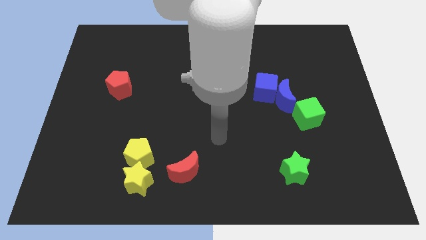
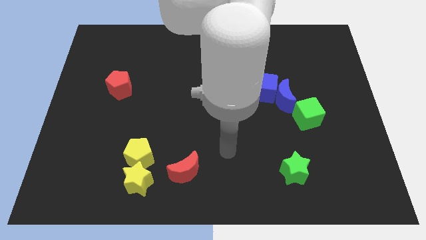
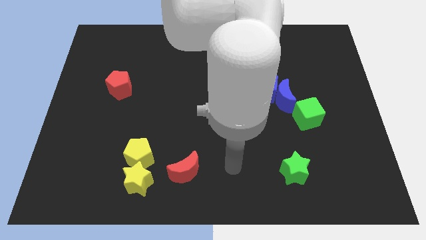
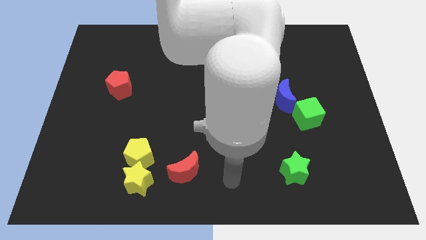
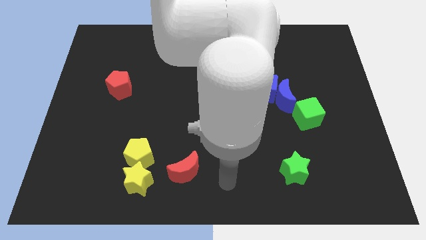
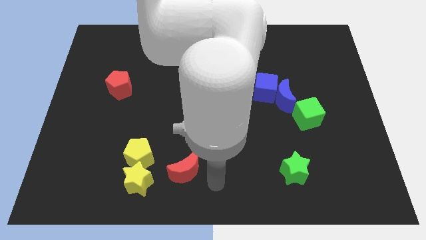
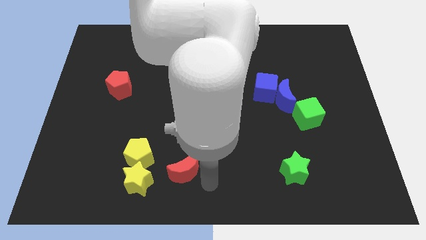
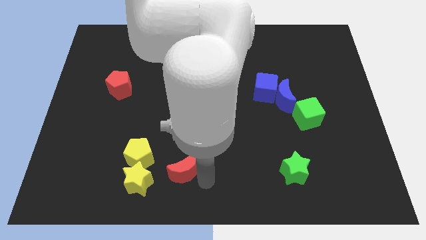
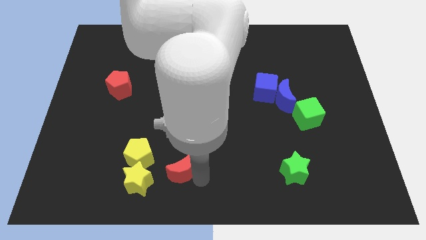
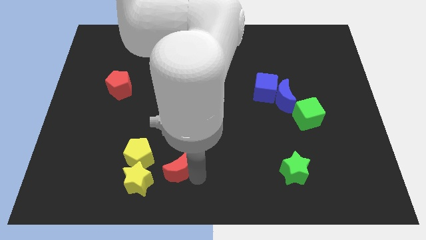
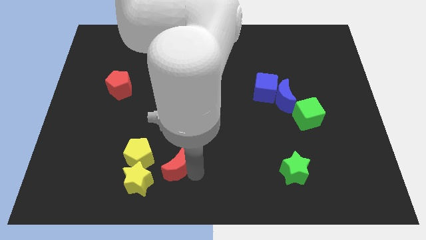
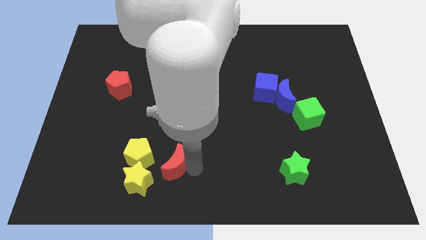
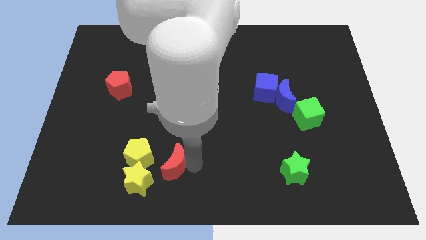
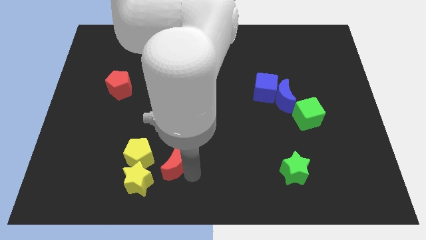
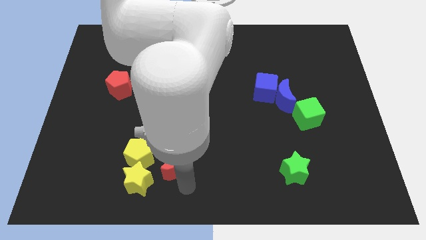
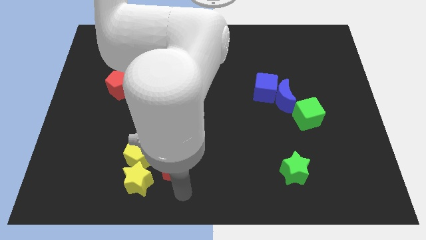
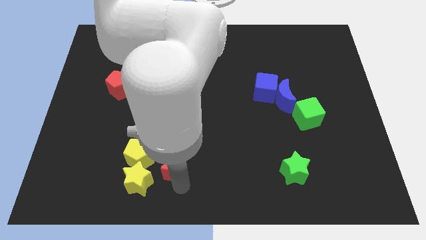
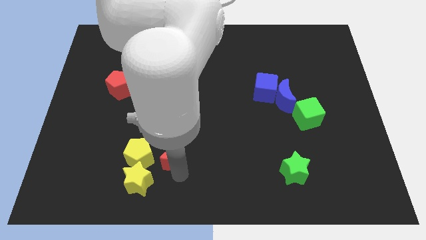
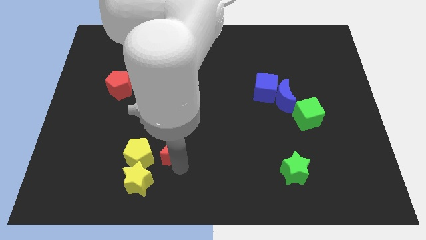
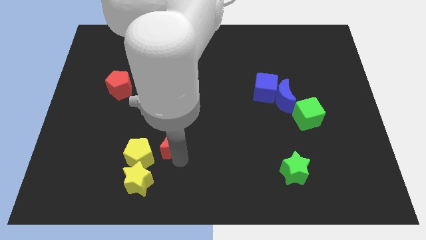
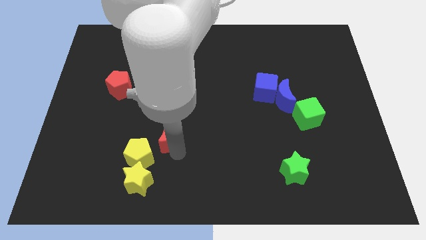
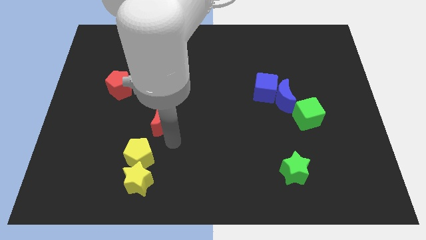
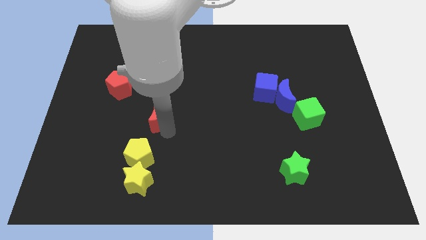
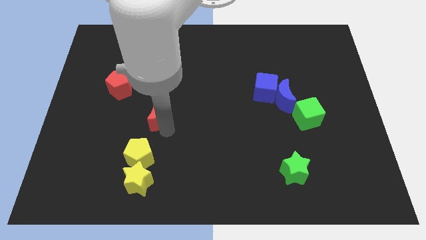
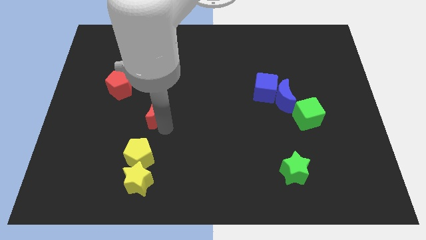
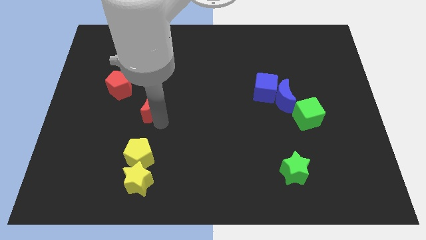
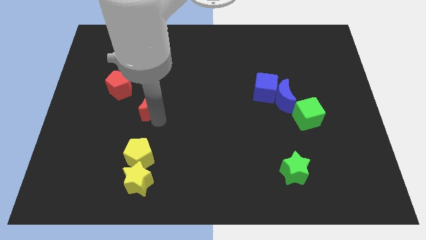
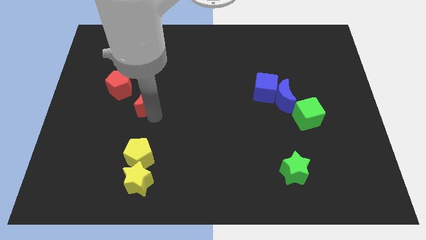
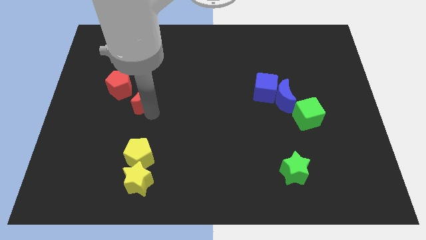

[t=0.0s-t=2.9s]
separate red moon from yellow blocks

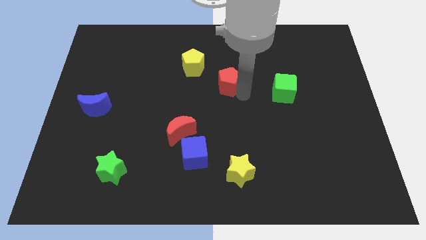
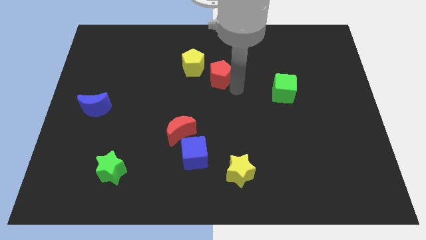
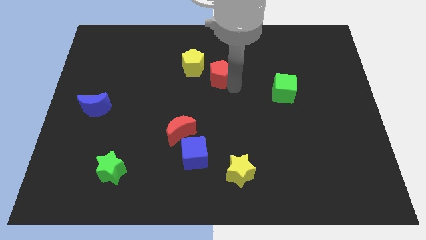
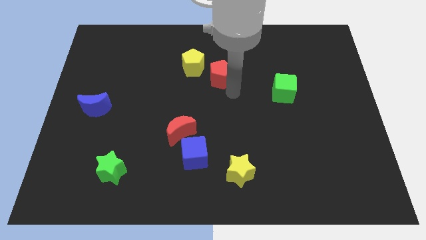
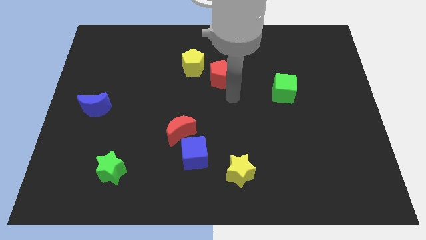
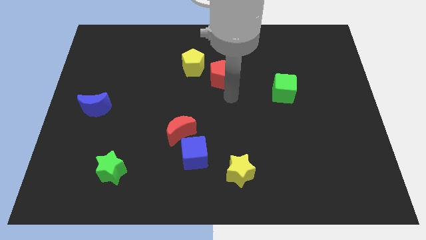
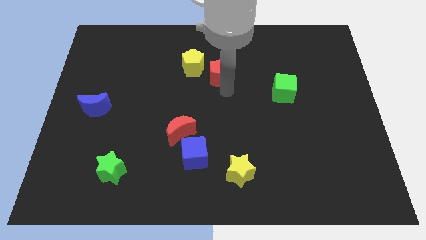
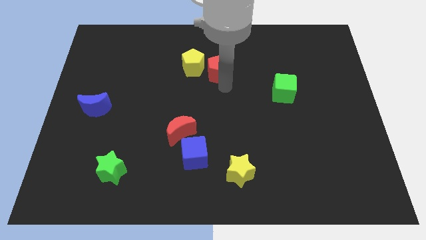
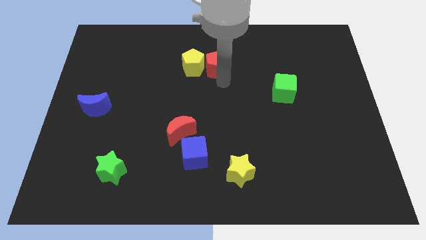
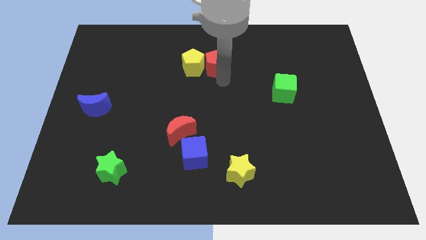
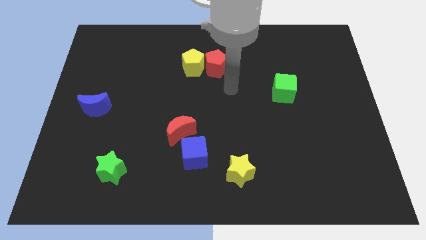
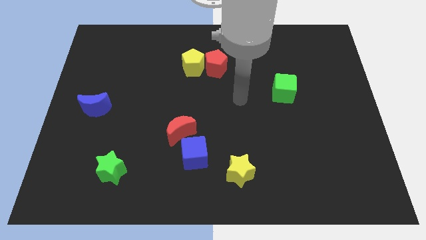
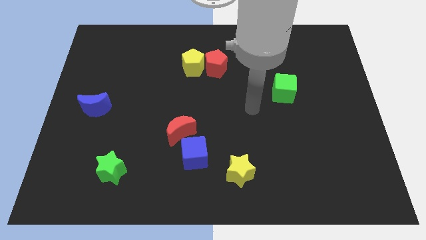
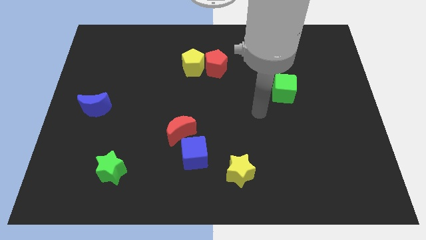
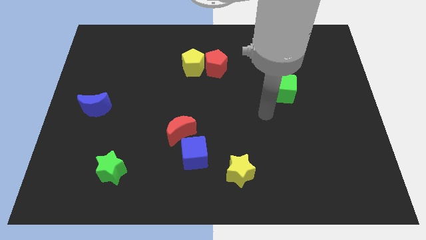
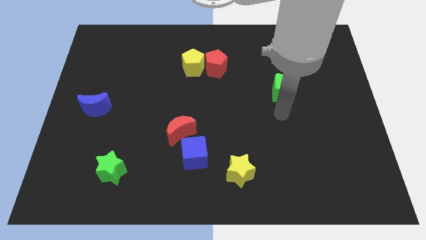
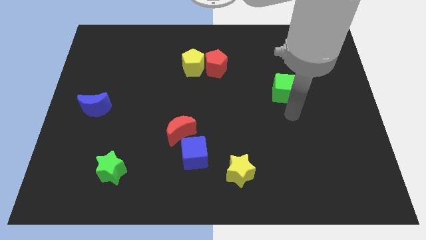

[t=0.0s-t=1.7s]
place the red pentagon to the right side of the yellow pentagon

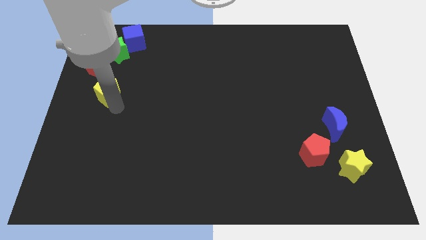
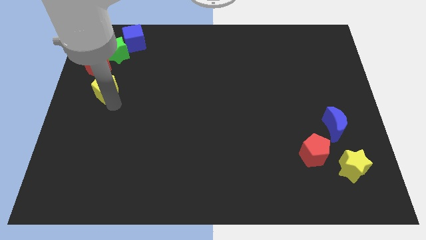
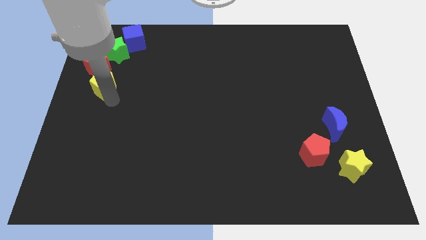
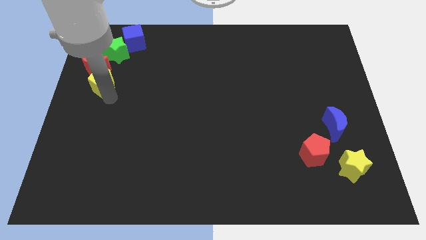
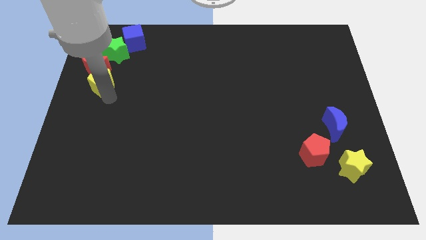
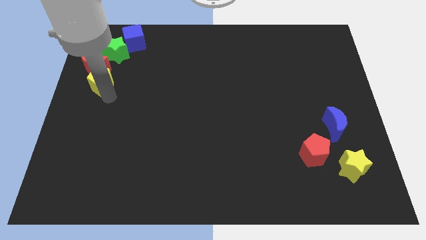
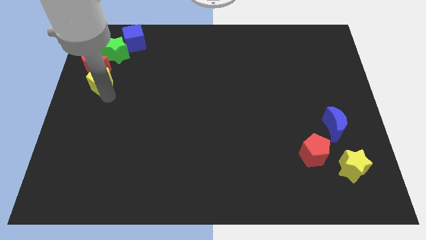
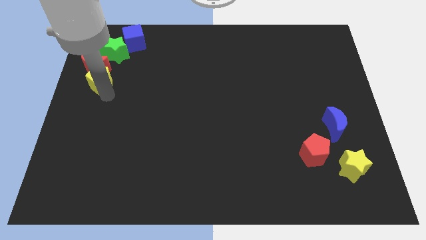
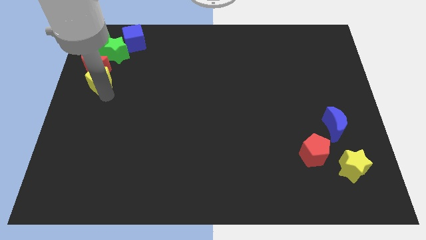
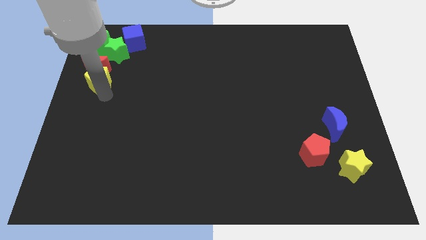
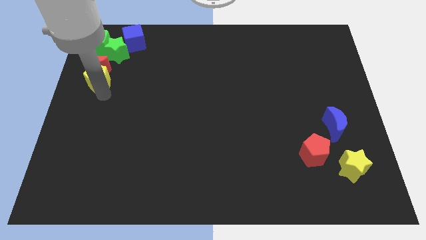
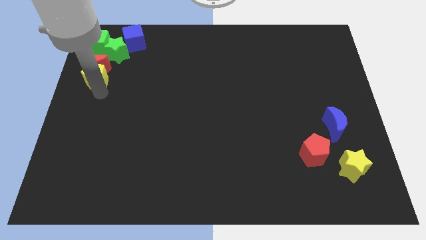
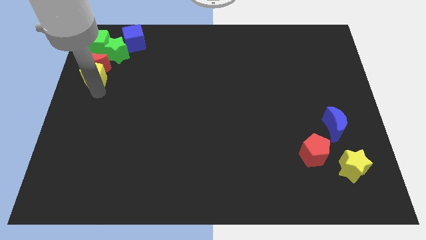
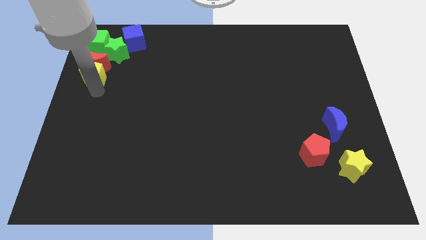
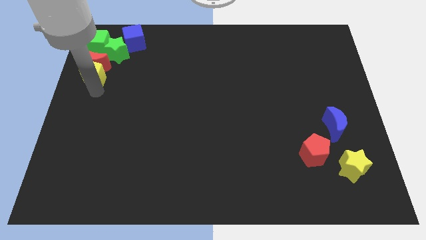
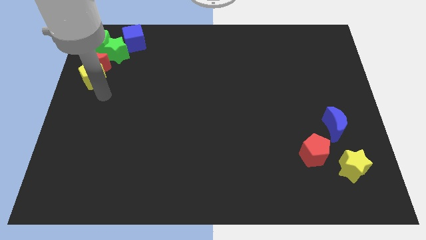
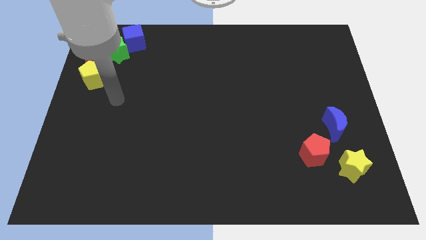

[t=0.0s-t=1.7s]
put the yellow pentagon into the red moon

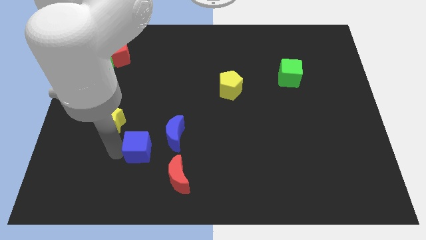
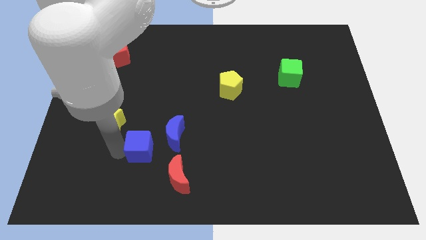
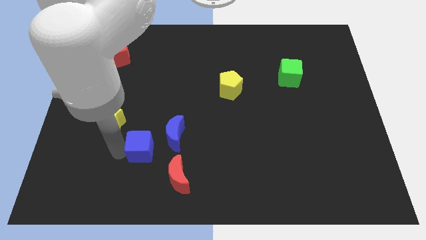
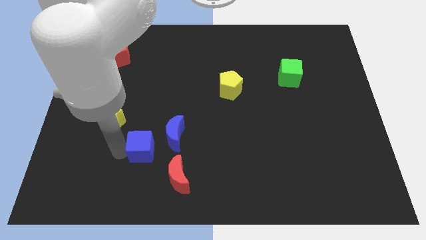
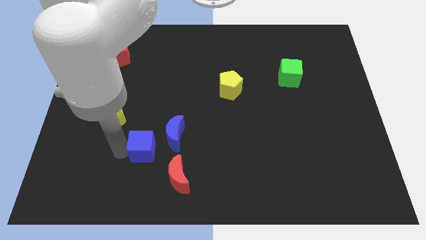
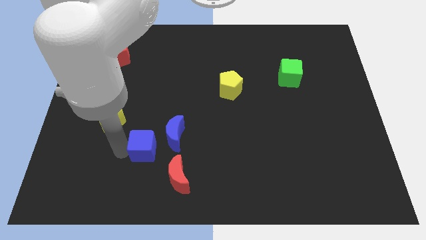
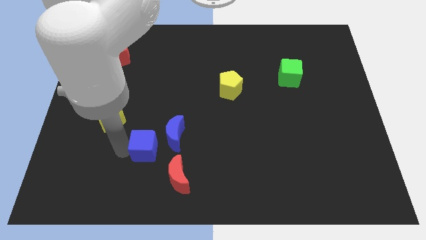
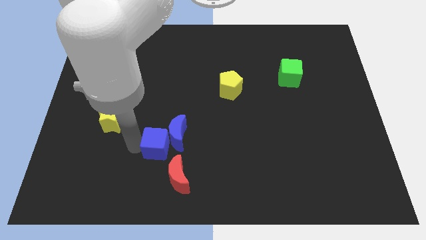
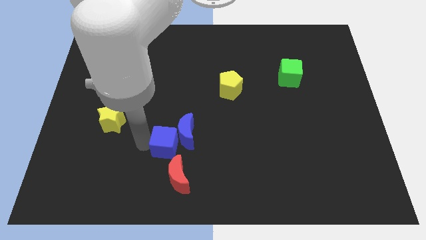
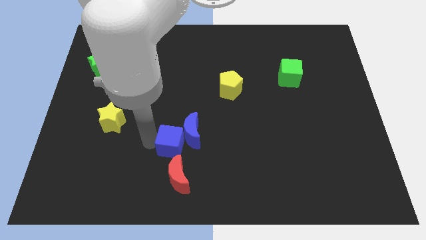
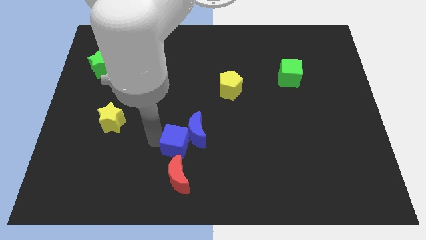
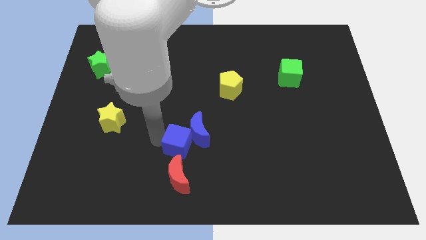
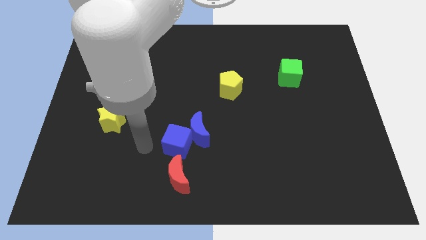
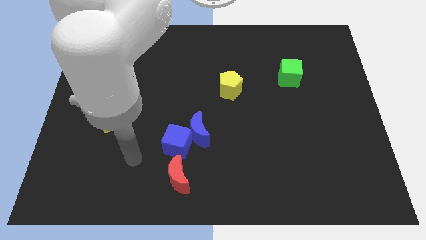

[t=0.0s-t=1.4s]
slide the blue cube into the blue moon

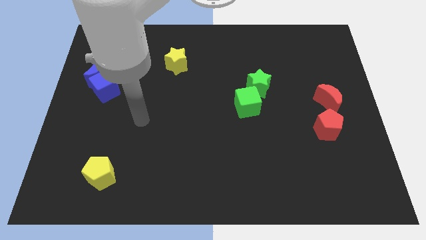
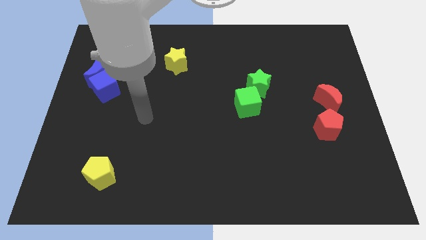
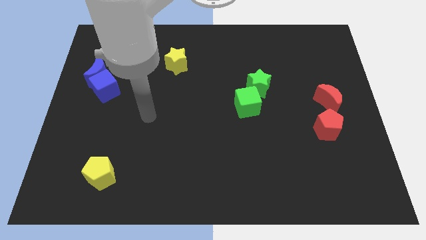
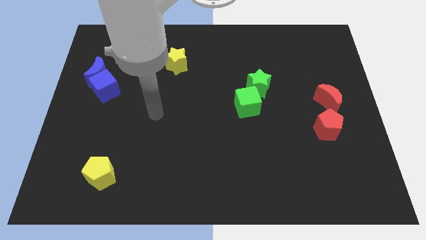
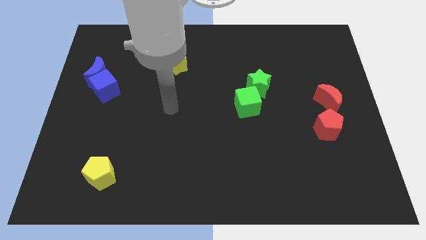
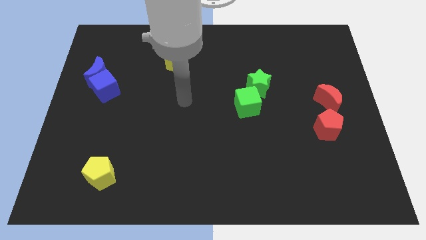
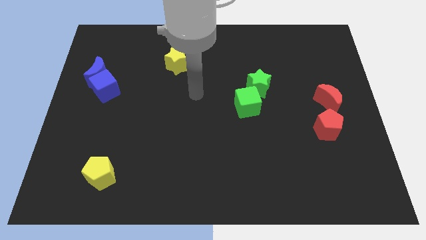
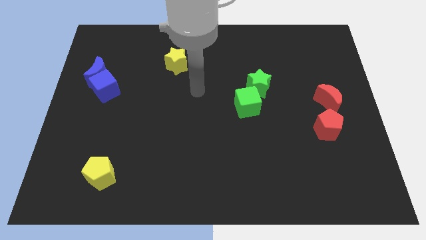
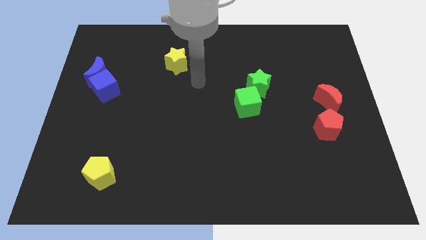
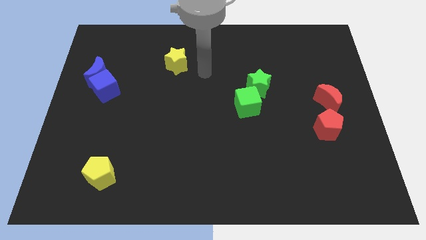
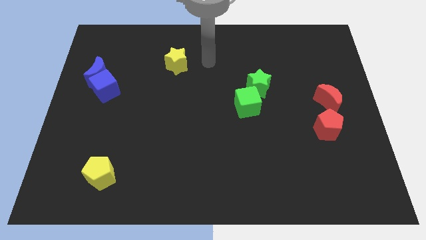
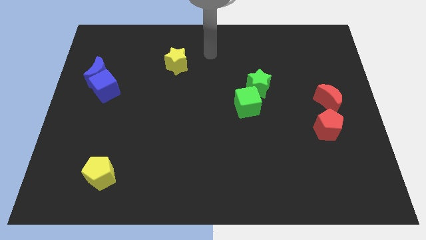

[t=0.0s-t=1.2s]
place your arm to the top right of star
